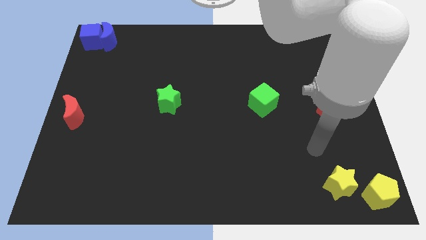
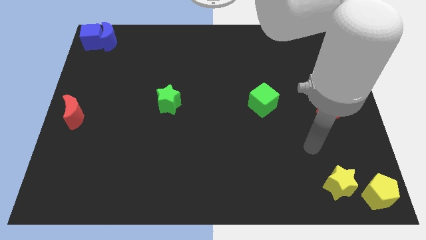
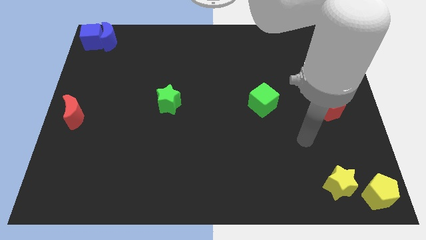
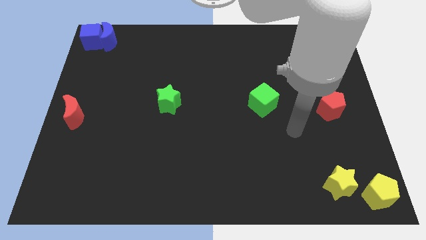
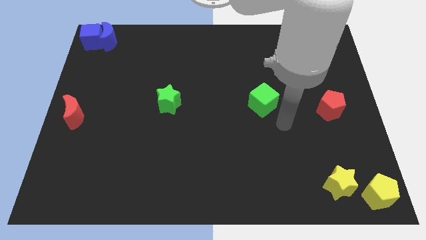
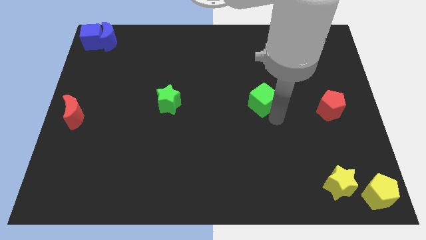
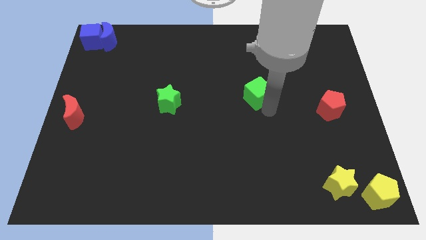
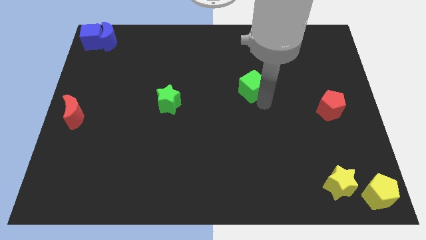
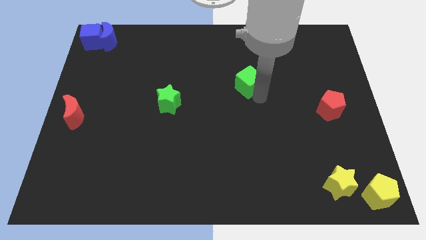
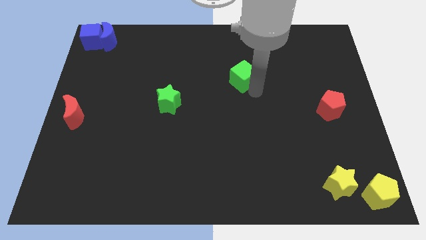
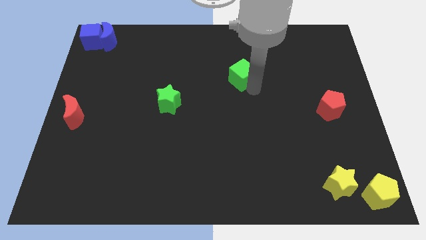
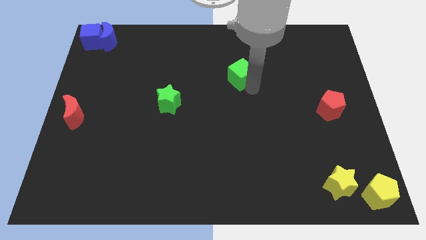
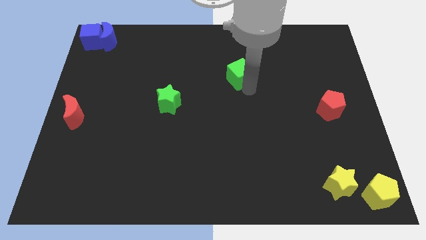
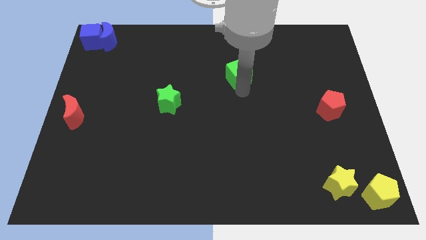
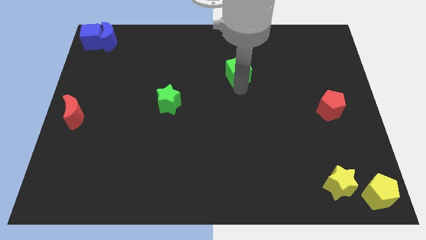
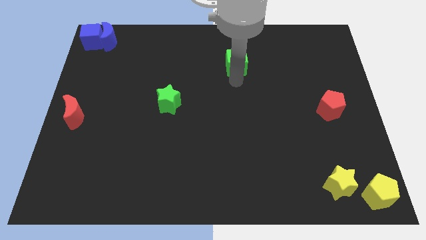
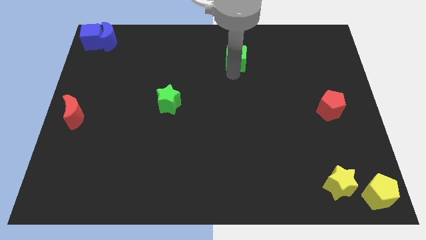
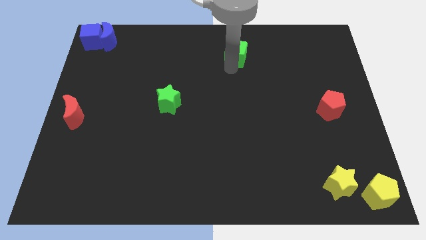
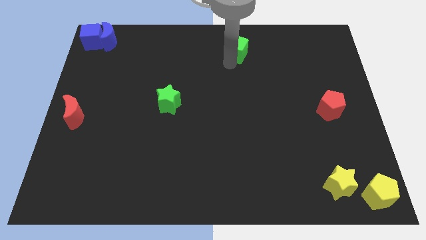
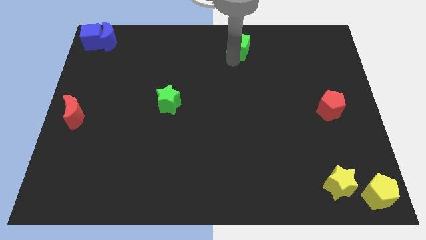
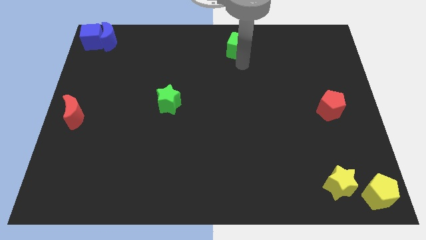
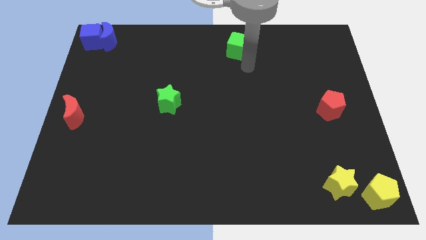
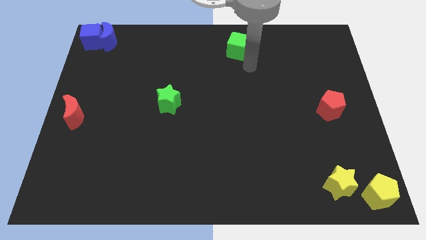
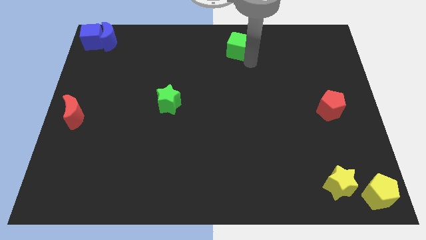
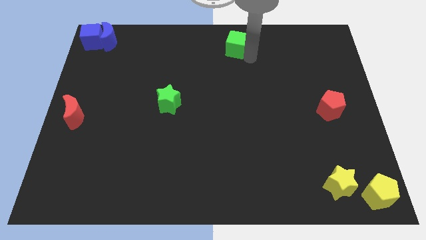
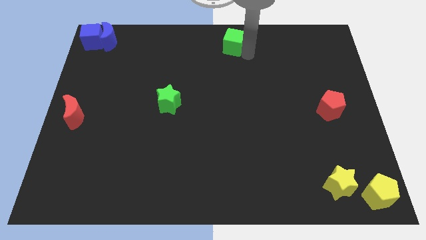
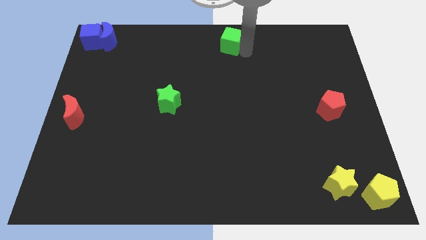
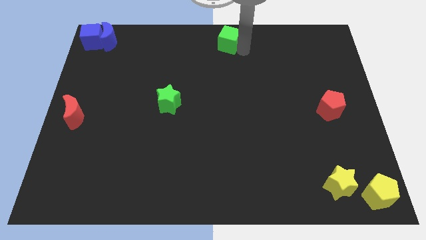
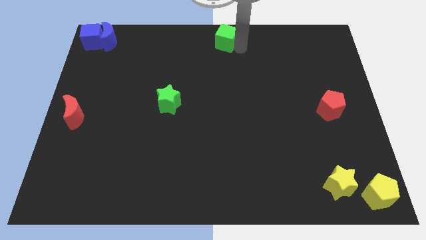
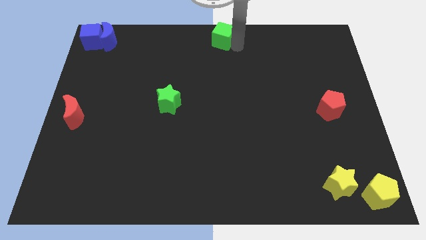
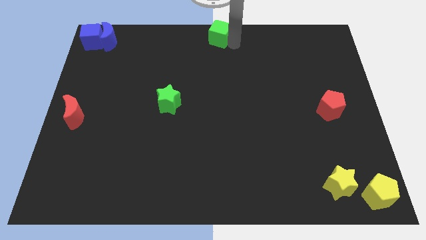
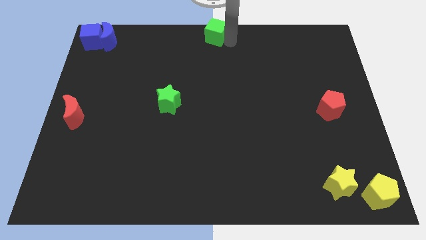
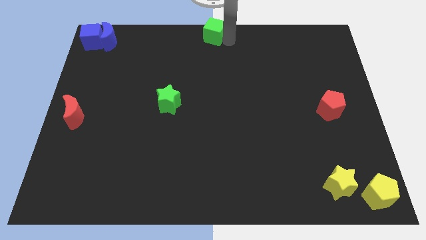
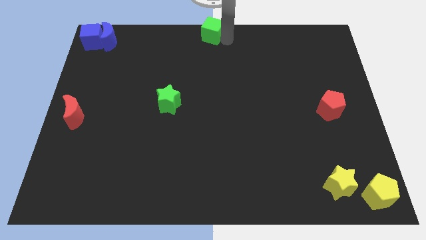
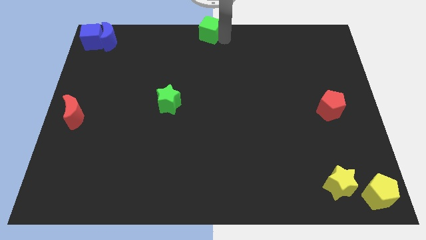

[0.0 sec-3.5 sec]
move the green cube to the top middle of the board

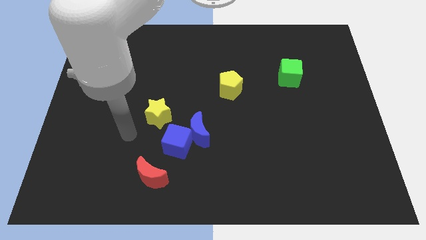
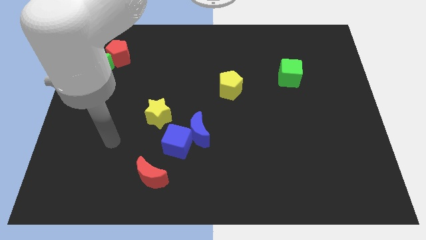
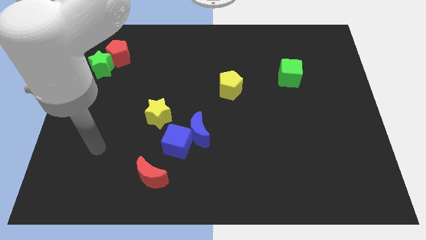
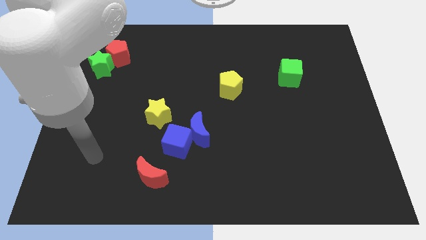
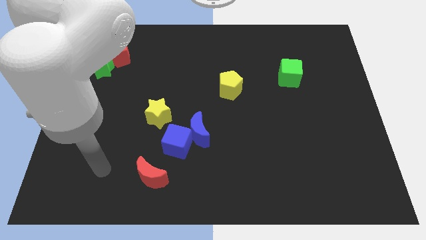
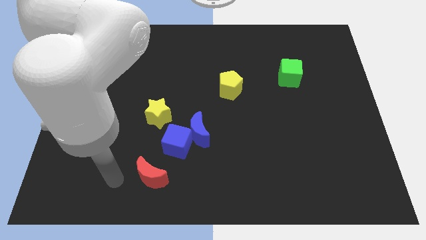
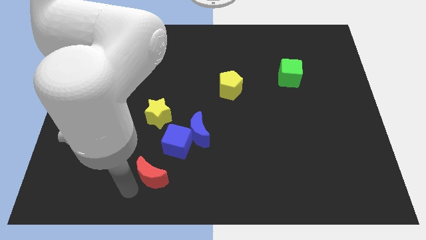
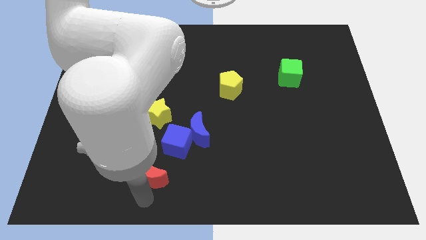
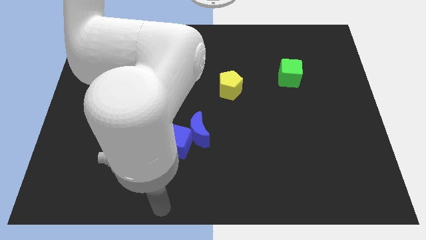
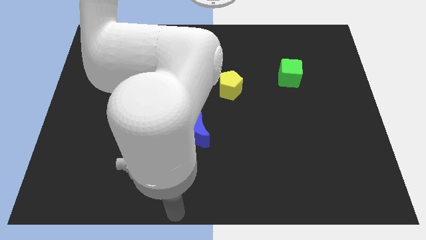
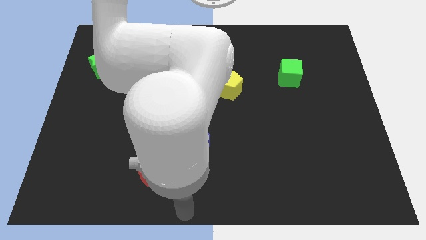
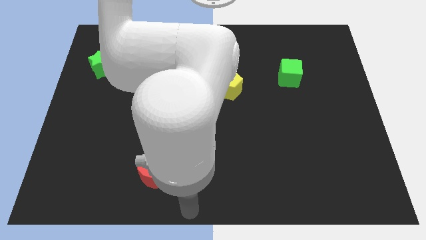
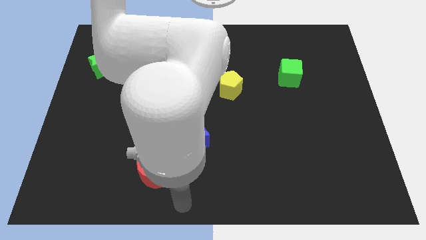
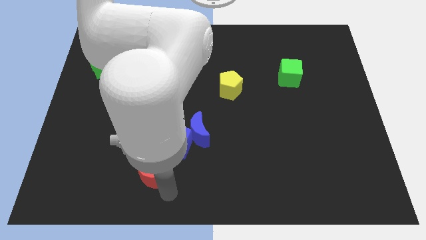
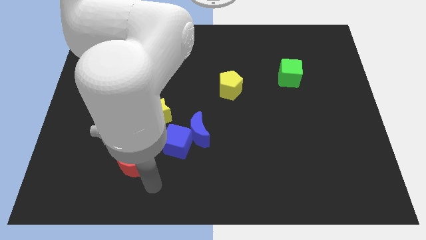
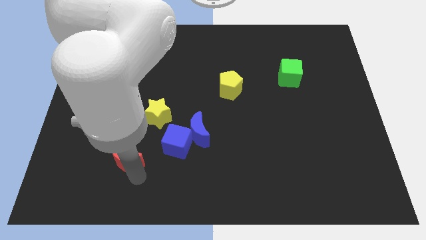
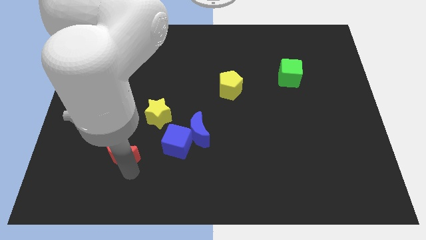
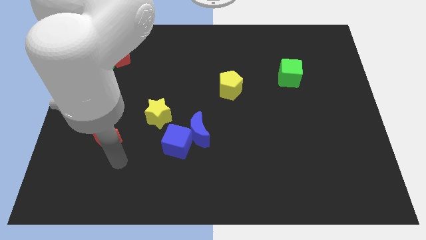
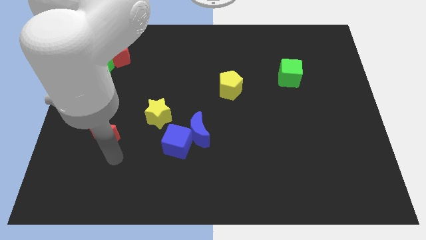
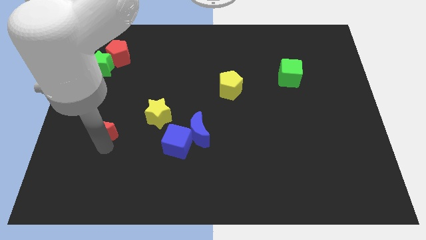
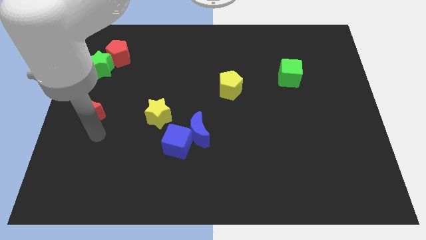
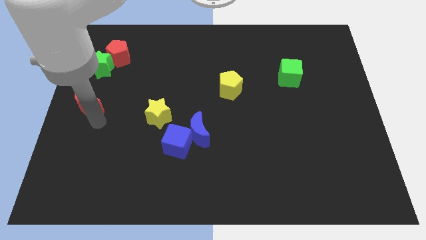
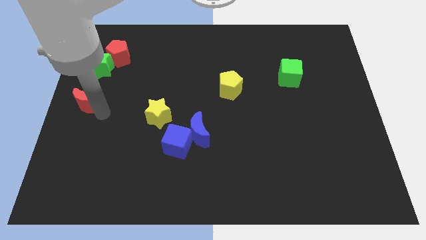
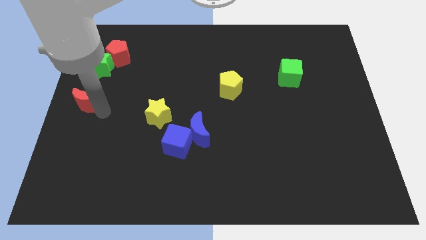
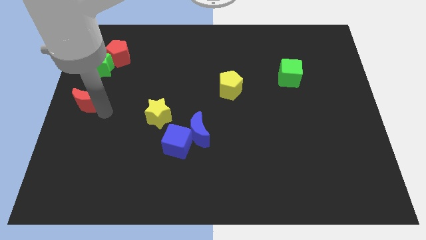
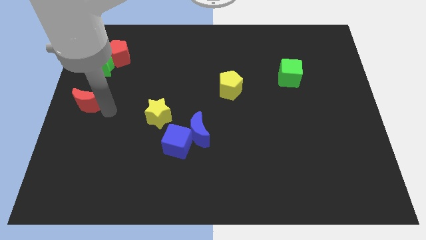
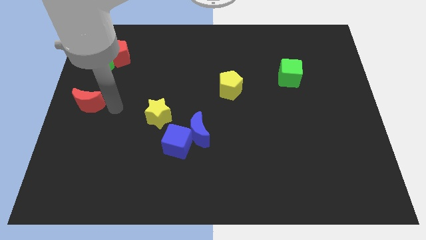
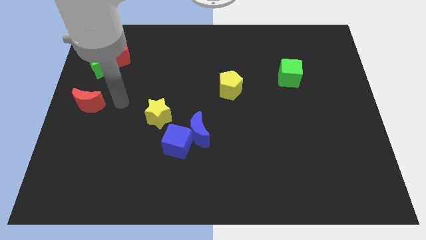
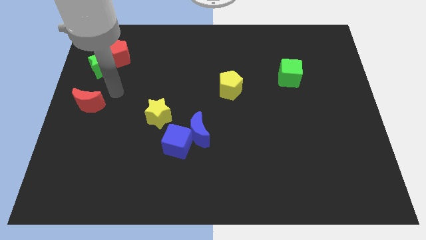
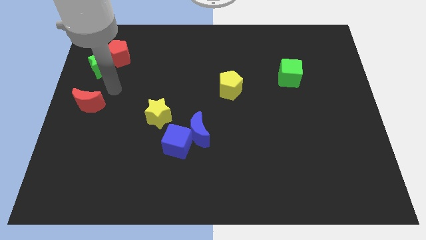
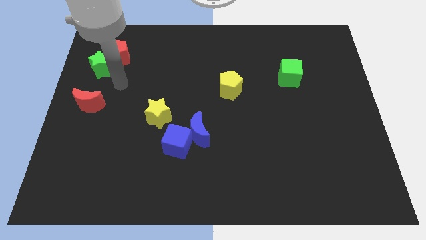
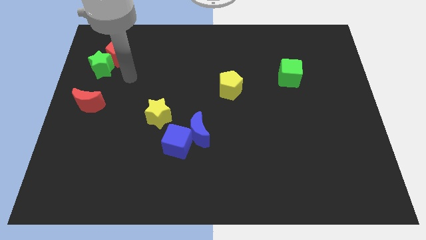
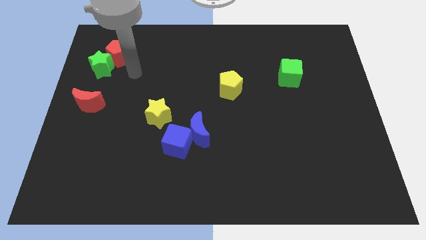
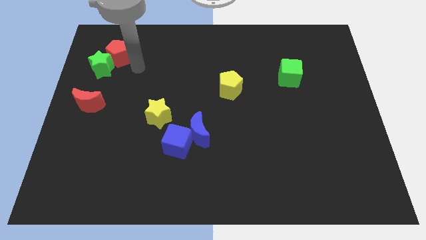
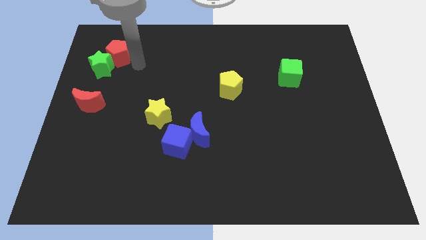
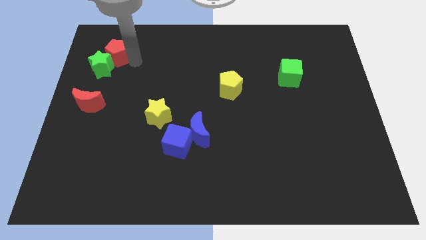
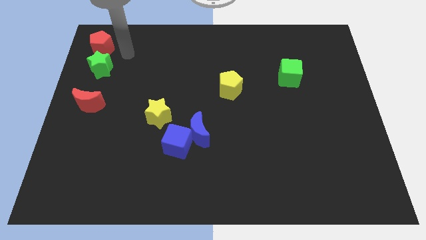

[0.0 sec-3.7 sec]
push the red moon towards the center left side

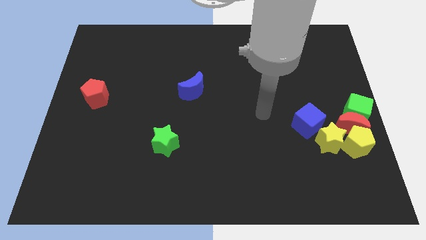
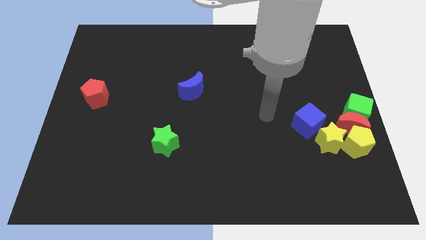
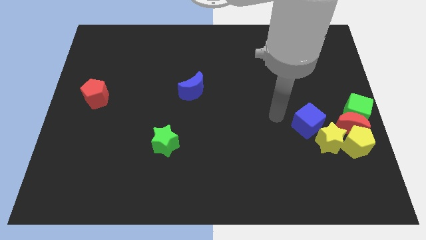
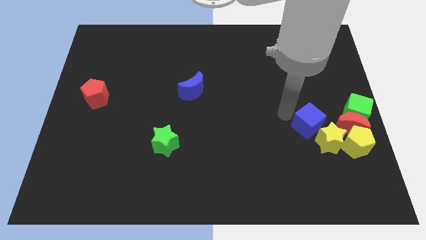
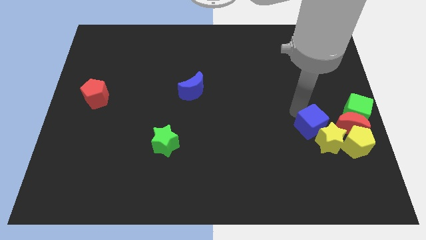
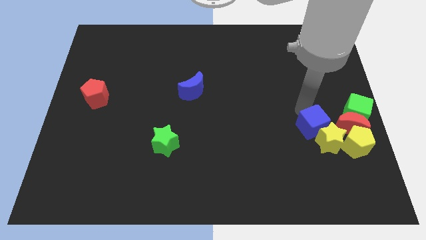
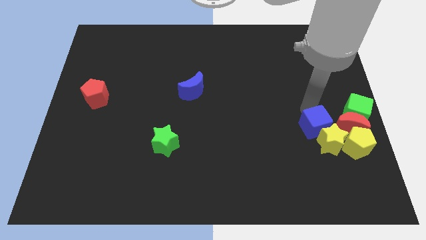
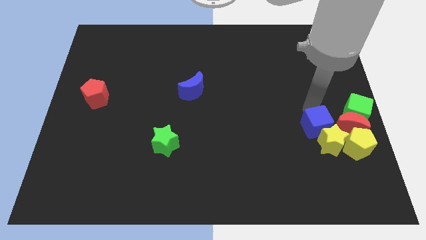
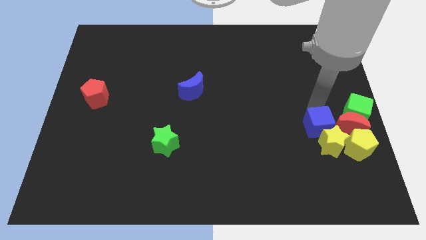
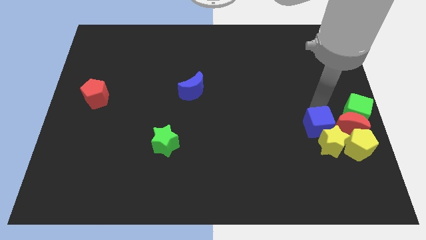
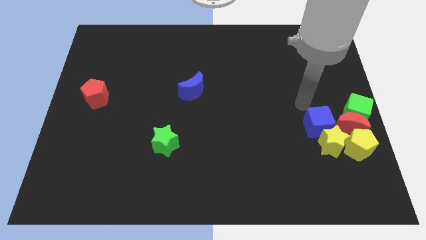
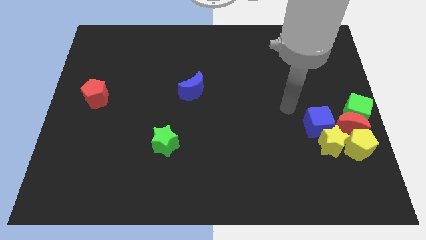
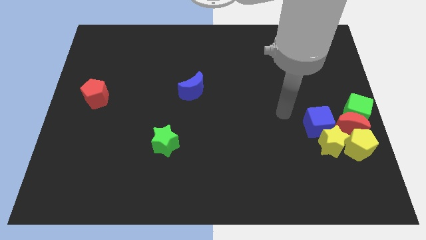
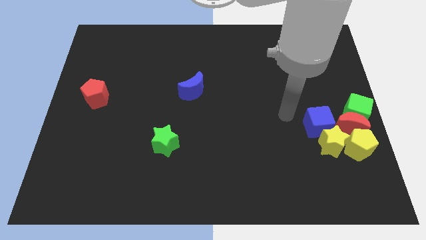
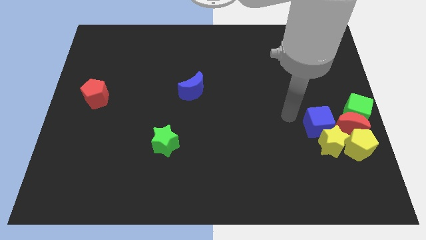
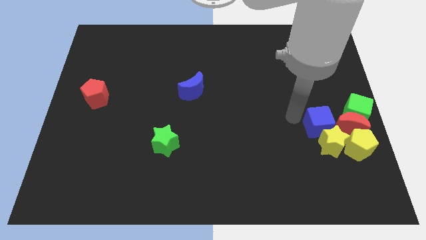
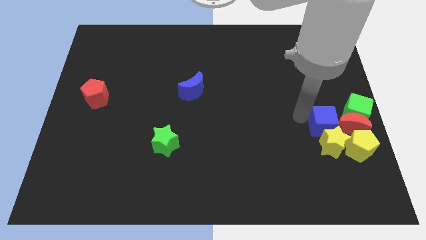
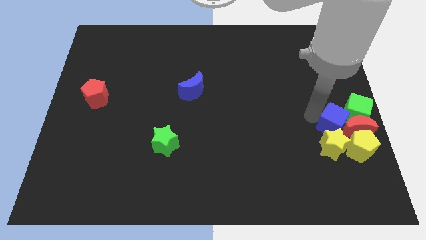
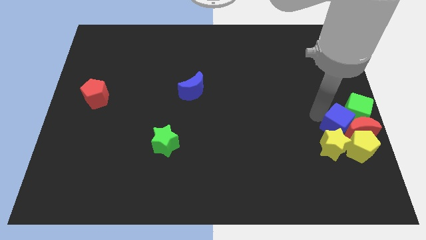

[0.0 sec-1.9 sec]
push the blue cube into a group of blocks
